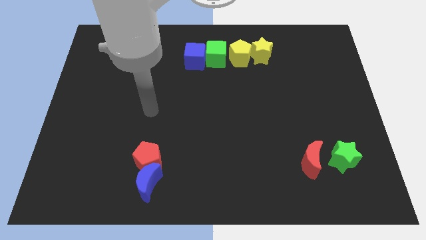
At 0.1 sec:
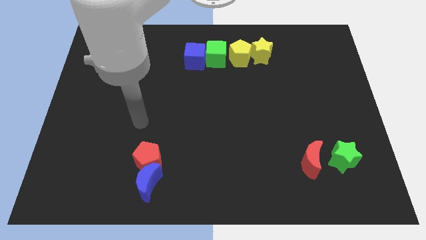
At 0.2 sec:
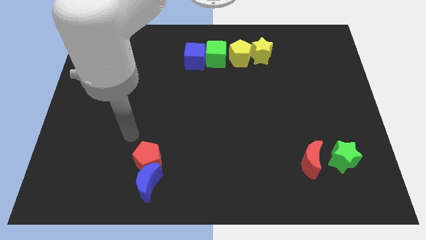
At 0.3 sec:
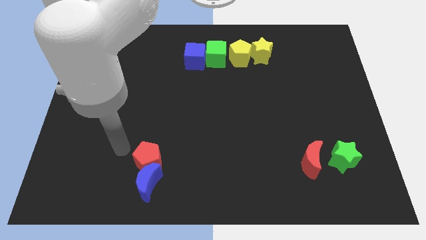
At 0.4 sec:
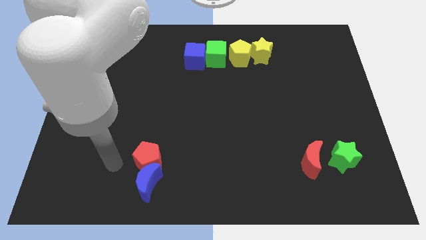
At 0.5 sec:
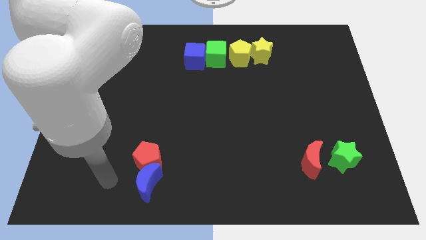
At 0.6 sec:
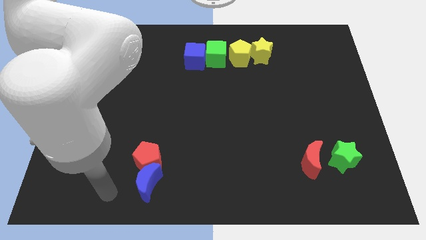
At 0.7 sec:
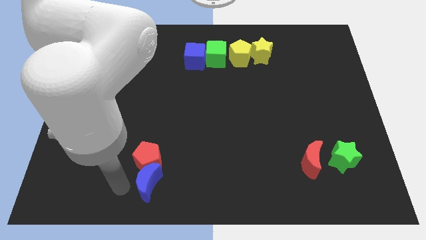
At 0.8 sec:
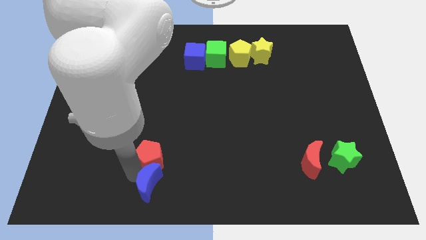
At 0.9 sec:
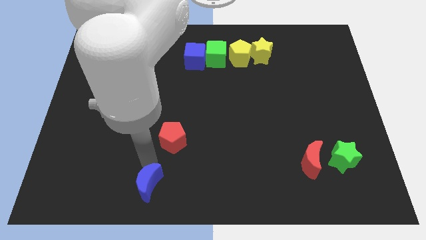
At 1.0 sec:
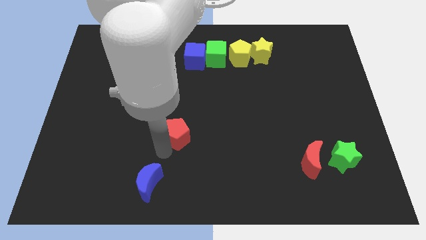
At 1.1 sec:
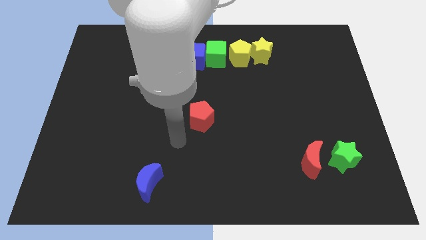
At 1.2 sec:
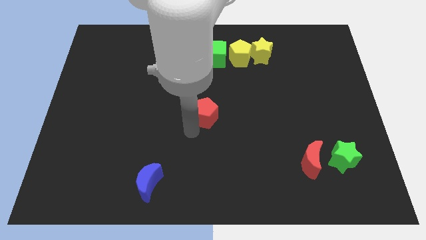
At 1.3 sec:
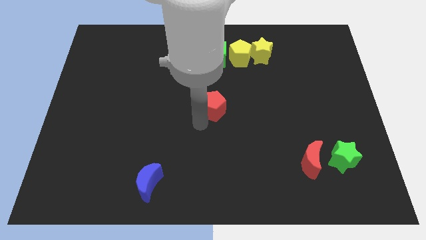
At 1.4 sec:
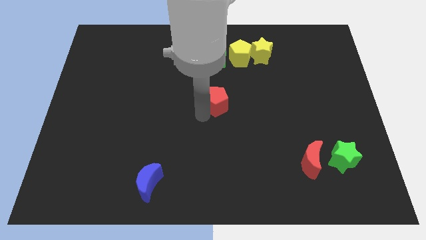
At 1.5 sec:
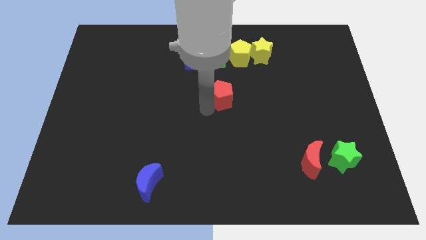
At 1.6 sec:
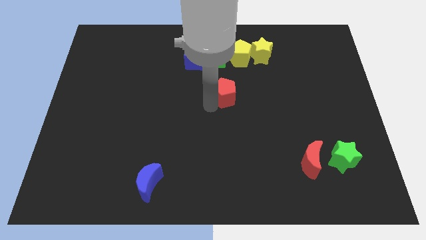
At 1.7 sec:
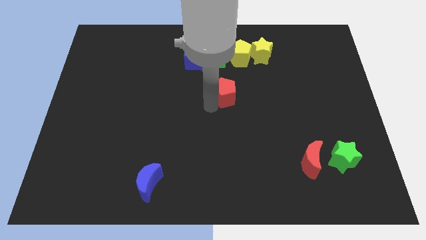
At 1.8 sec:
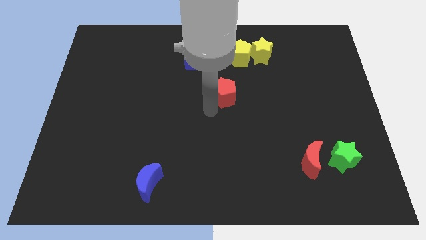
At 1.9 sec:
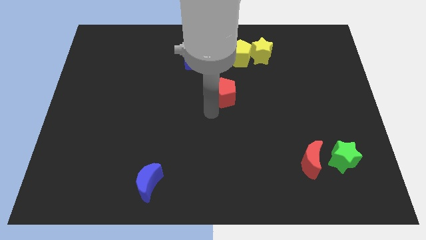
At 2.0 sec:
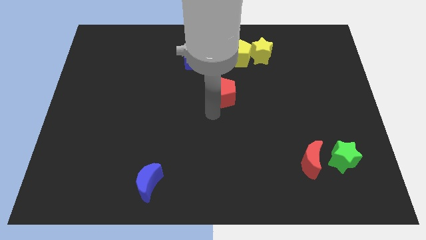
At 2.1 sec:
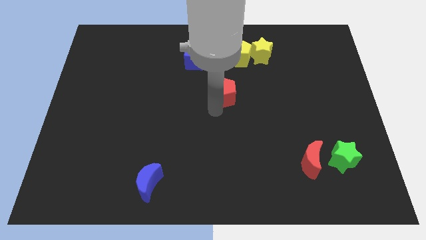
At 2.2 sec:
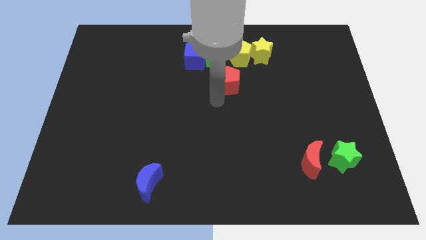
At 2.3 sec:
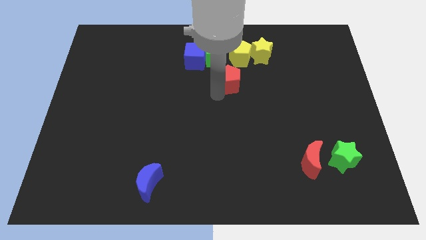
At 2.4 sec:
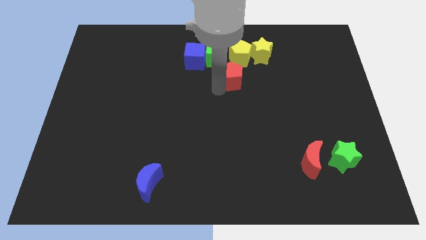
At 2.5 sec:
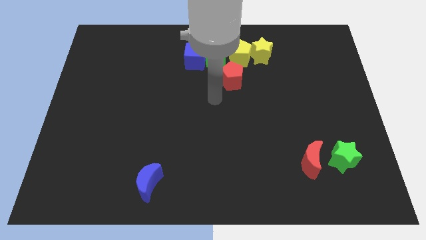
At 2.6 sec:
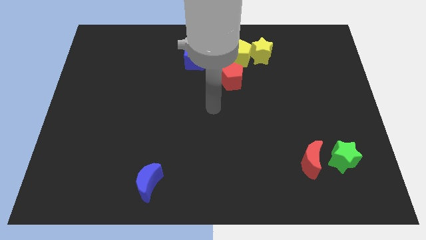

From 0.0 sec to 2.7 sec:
move red pentagon below the yellow pentagon

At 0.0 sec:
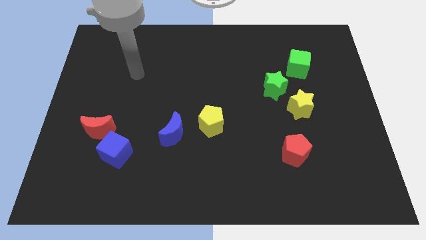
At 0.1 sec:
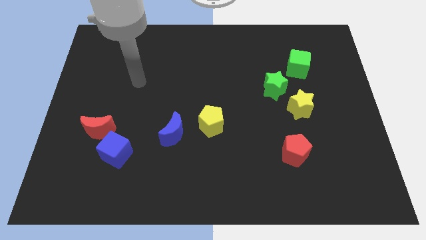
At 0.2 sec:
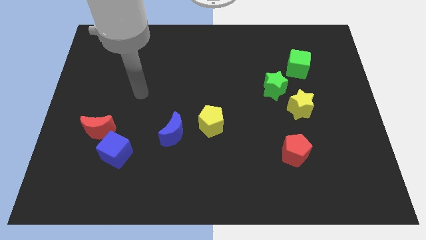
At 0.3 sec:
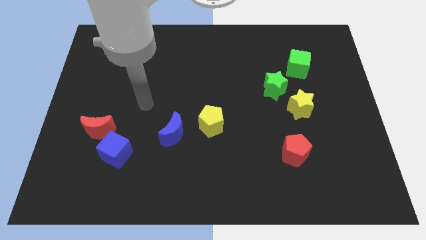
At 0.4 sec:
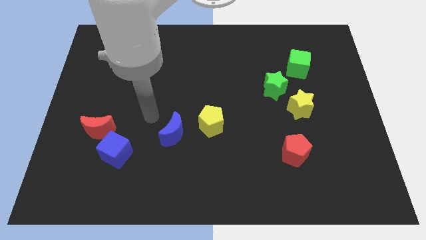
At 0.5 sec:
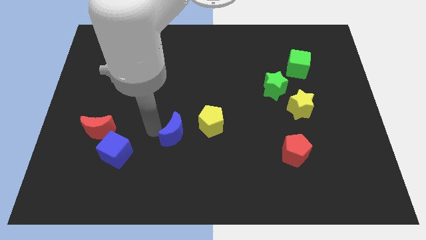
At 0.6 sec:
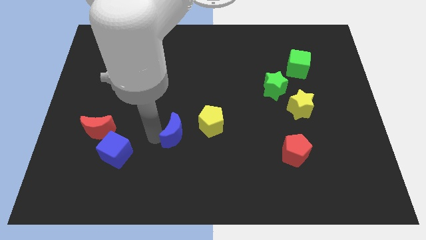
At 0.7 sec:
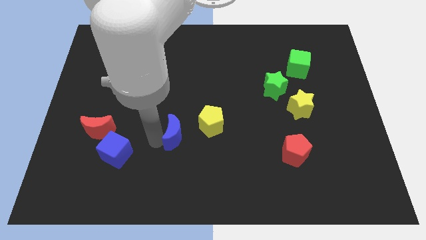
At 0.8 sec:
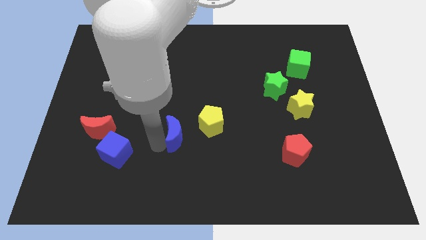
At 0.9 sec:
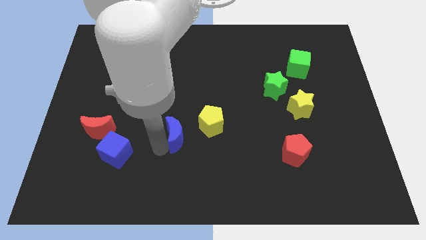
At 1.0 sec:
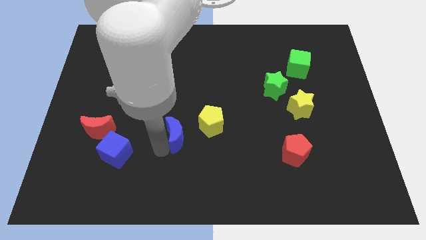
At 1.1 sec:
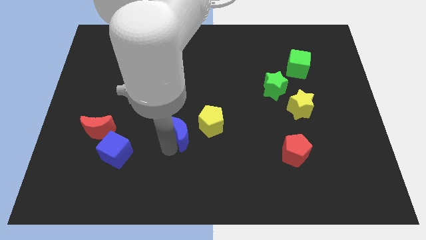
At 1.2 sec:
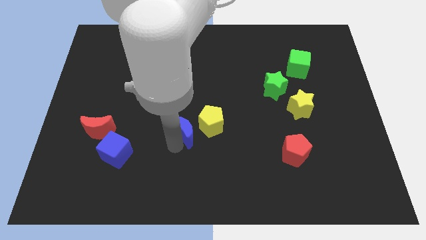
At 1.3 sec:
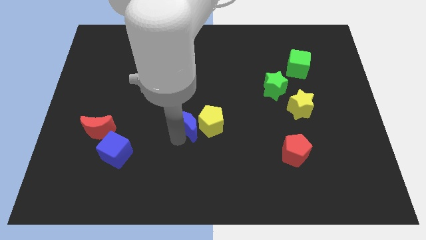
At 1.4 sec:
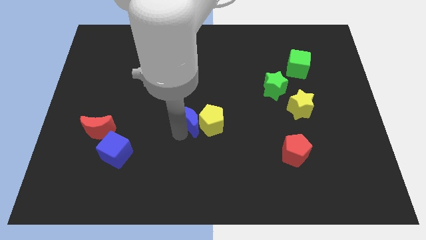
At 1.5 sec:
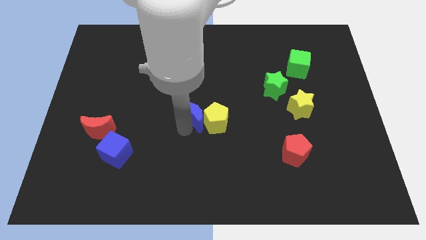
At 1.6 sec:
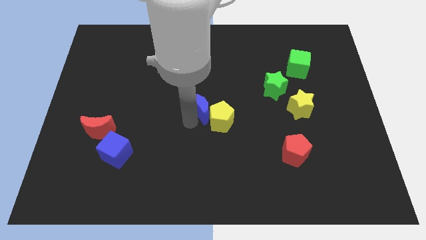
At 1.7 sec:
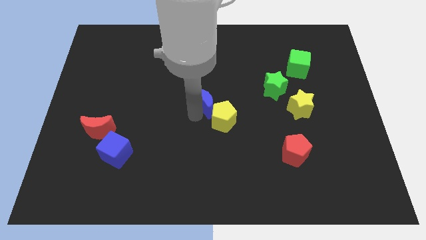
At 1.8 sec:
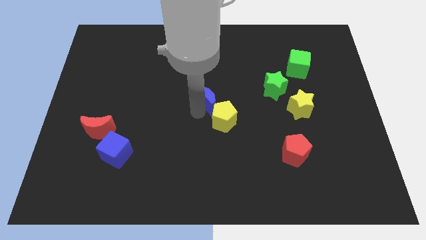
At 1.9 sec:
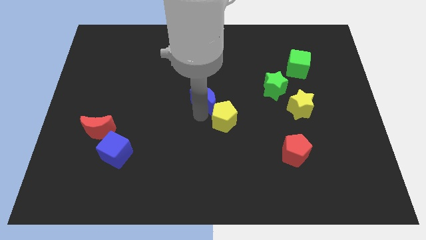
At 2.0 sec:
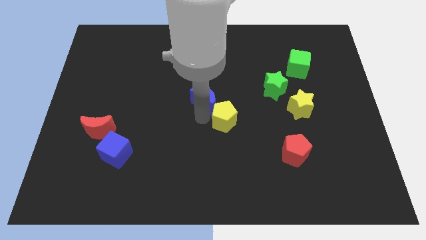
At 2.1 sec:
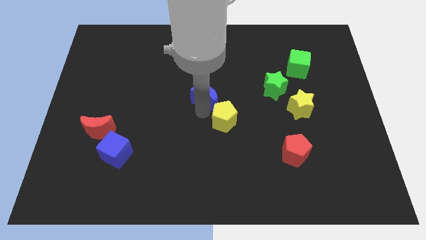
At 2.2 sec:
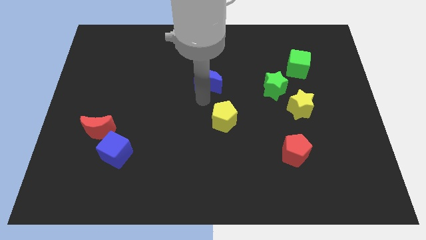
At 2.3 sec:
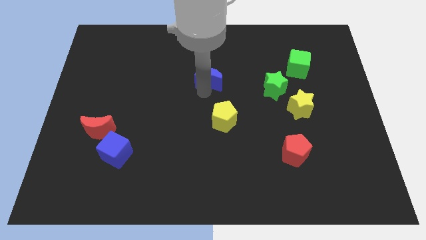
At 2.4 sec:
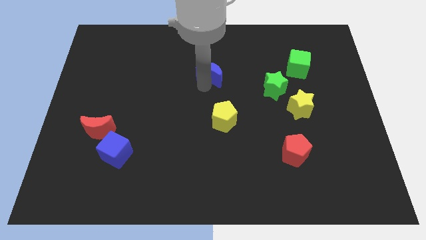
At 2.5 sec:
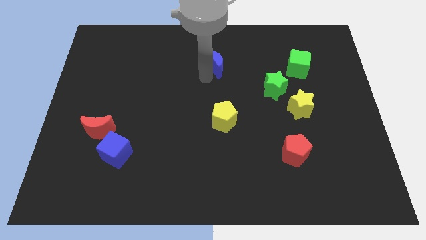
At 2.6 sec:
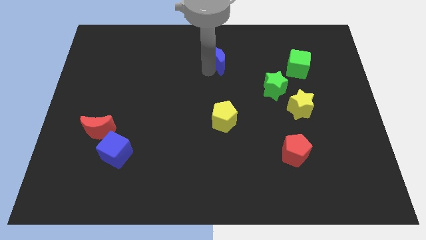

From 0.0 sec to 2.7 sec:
place blue moon above yellow pentagon

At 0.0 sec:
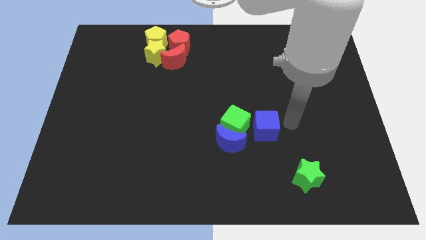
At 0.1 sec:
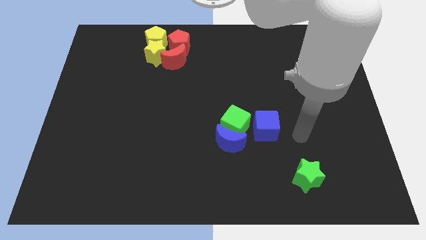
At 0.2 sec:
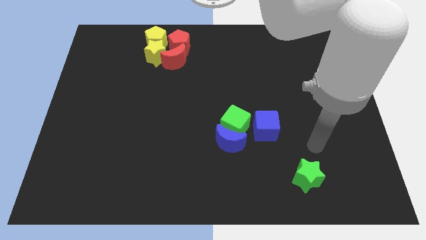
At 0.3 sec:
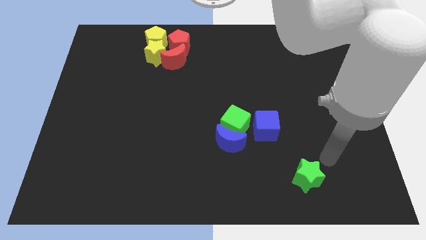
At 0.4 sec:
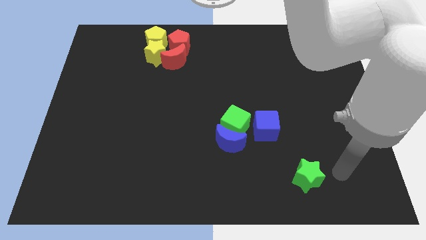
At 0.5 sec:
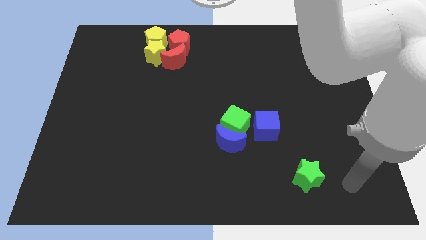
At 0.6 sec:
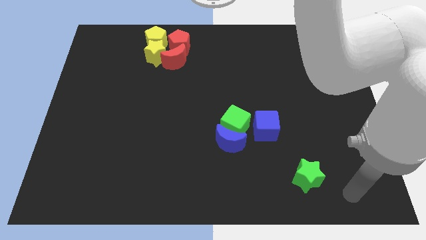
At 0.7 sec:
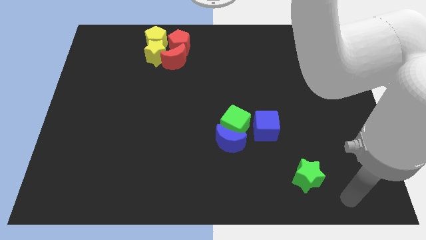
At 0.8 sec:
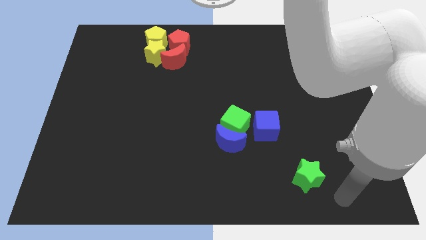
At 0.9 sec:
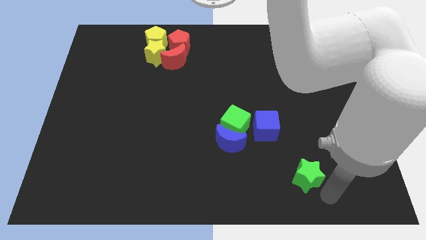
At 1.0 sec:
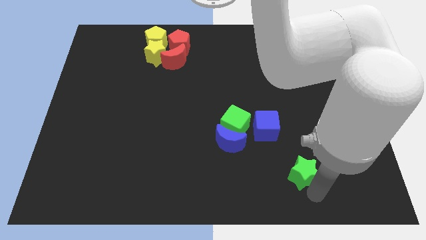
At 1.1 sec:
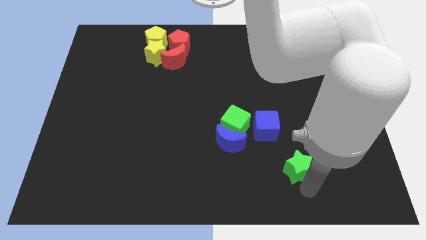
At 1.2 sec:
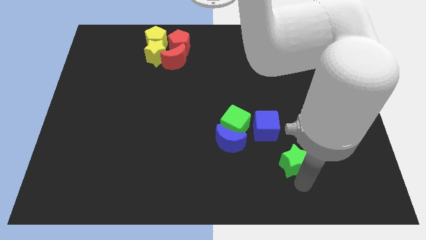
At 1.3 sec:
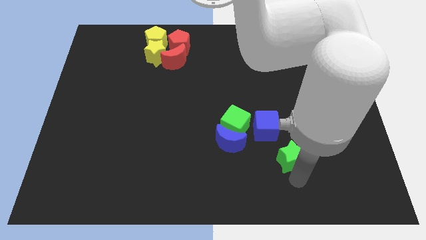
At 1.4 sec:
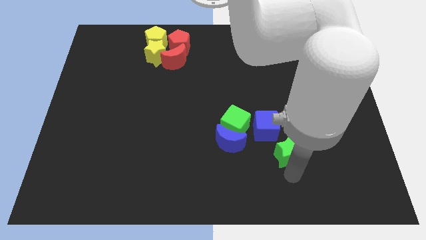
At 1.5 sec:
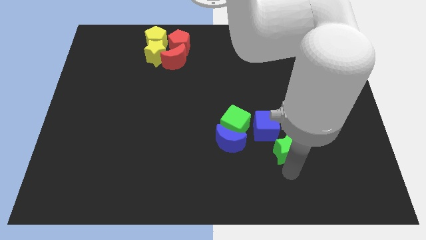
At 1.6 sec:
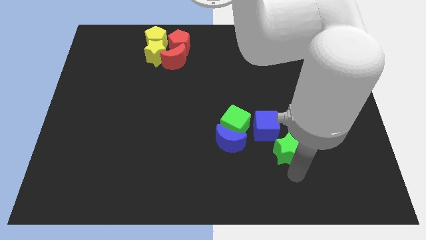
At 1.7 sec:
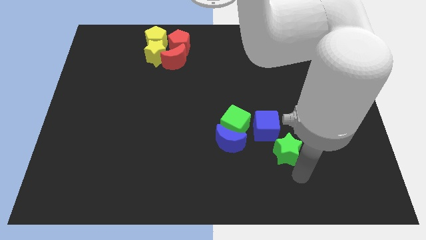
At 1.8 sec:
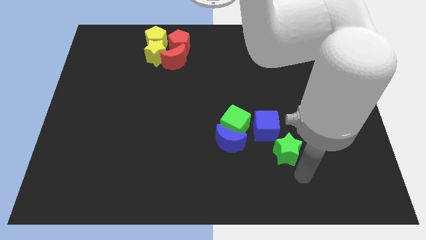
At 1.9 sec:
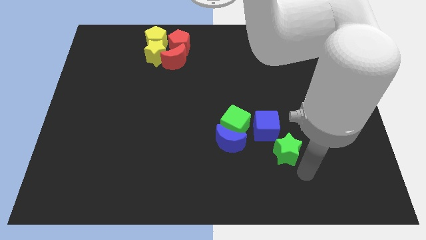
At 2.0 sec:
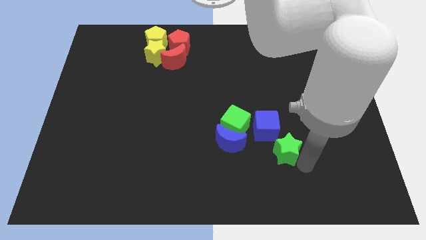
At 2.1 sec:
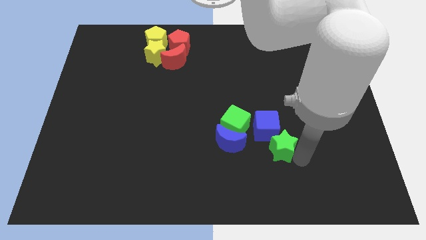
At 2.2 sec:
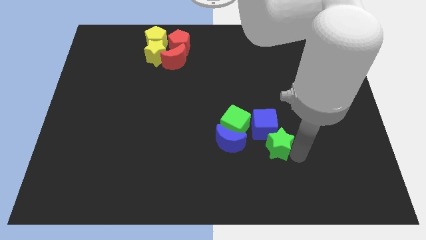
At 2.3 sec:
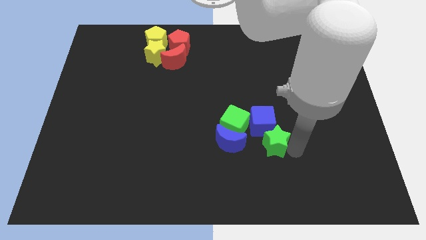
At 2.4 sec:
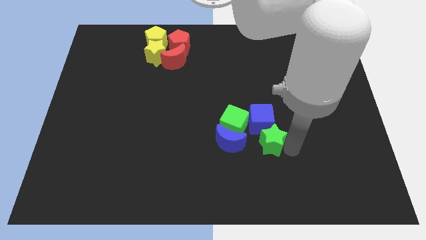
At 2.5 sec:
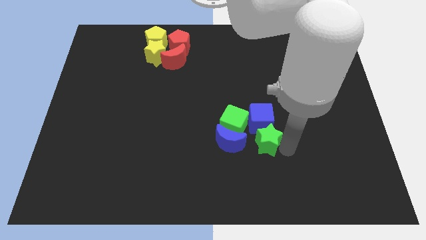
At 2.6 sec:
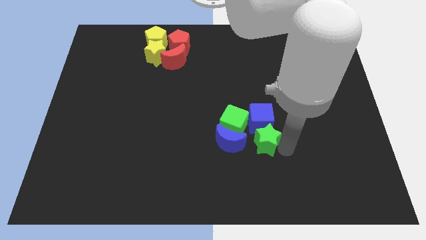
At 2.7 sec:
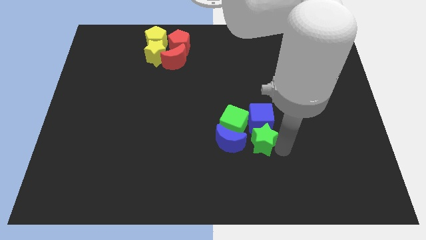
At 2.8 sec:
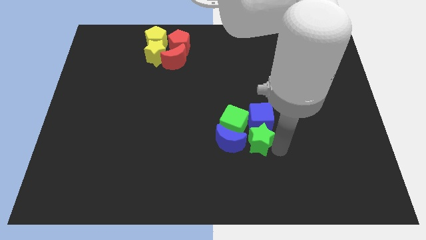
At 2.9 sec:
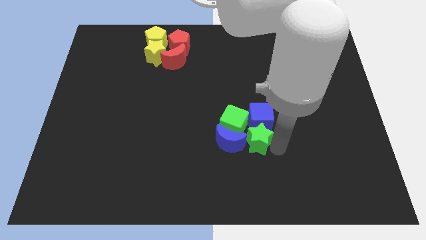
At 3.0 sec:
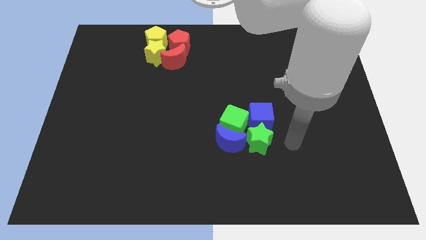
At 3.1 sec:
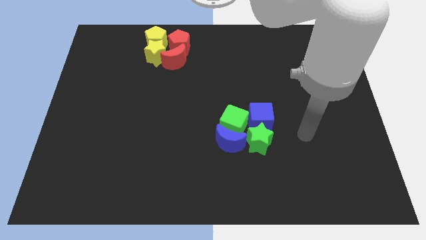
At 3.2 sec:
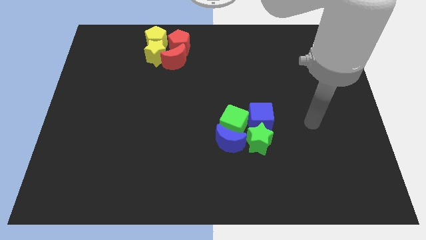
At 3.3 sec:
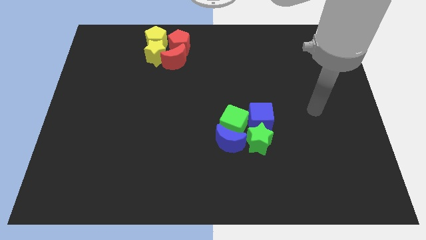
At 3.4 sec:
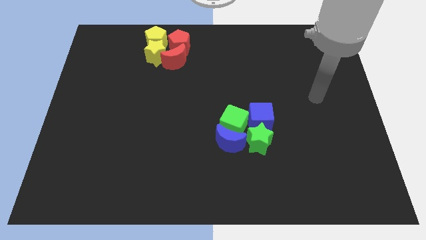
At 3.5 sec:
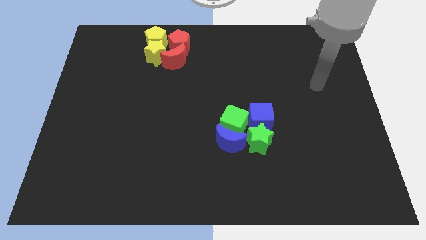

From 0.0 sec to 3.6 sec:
move the green star to the group of blocks
